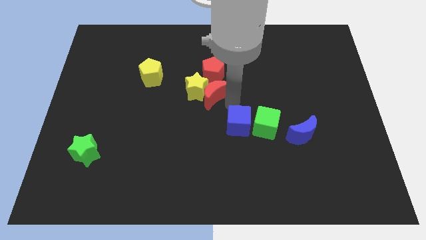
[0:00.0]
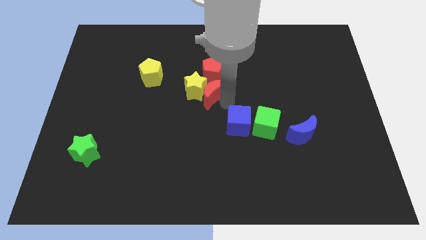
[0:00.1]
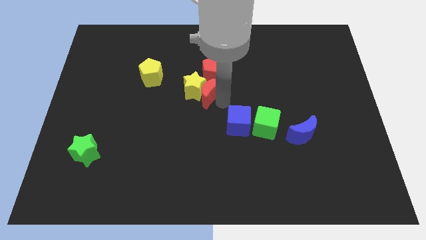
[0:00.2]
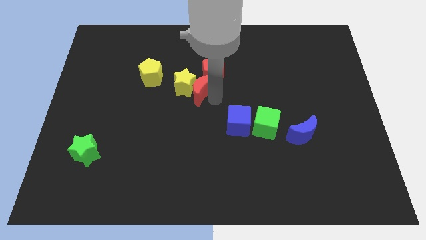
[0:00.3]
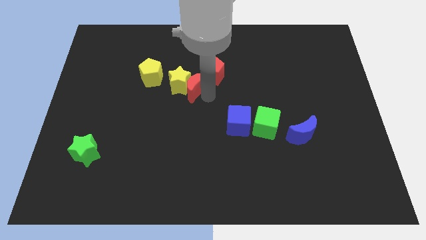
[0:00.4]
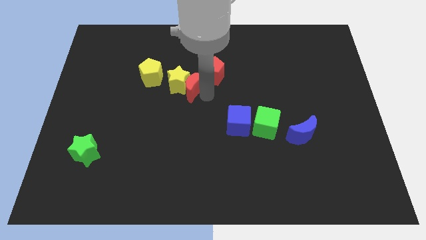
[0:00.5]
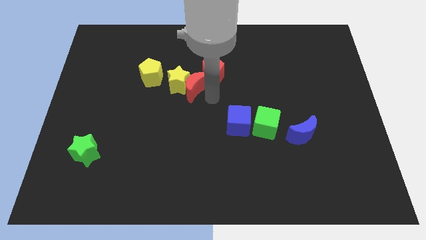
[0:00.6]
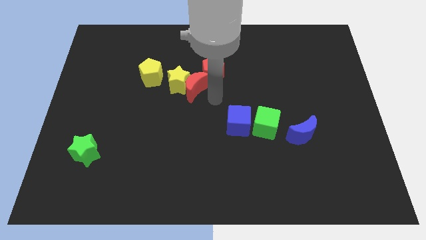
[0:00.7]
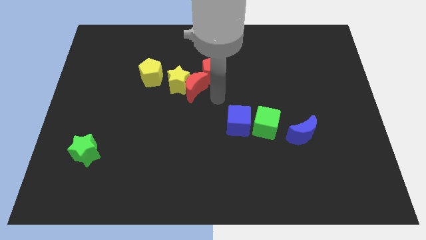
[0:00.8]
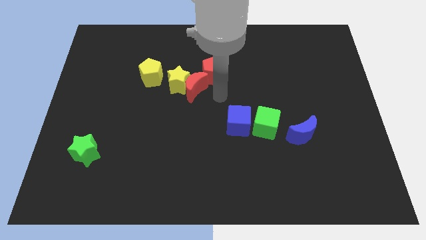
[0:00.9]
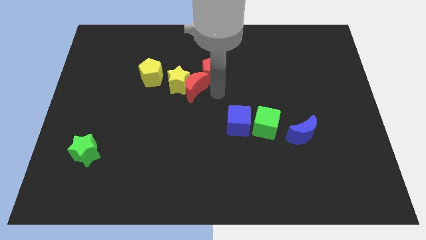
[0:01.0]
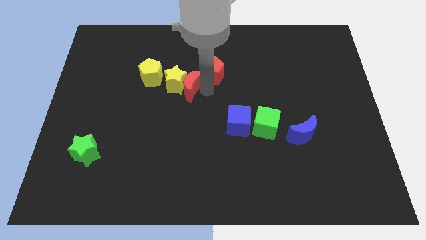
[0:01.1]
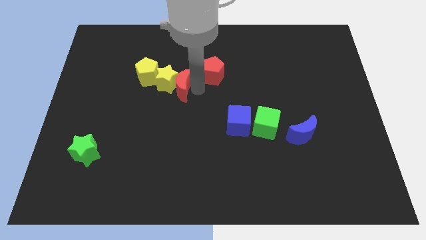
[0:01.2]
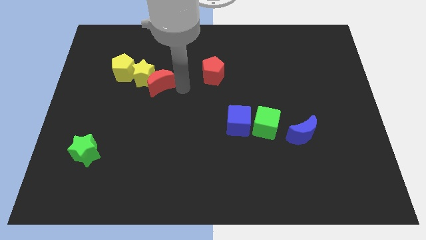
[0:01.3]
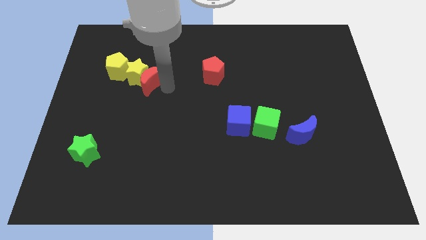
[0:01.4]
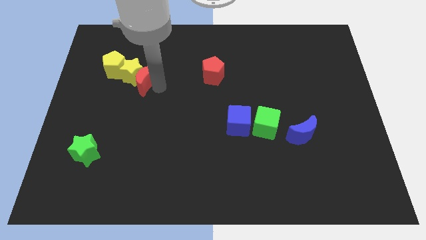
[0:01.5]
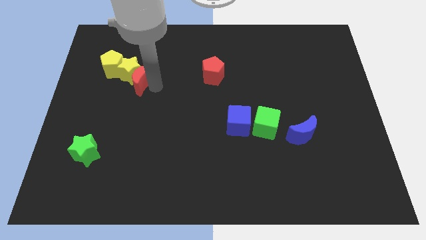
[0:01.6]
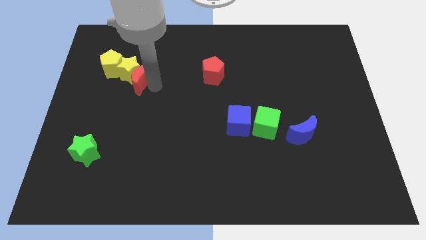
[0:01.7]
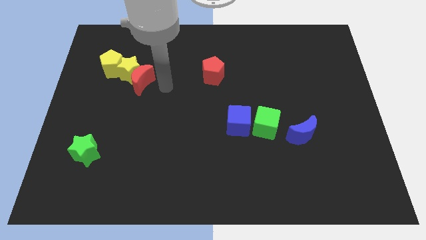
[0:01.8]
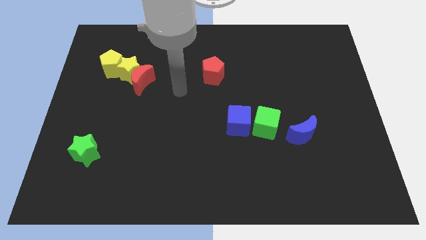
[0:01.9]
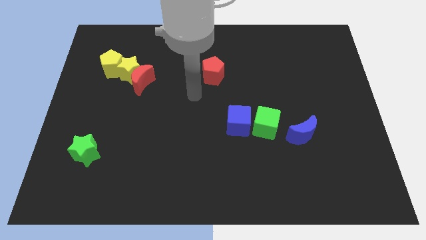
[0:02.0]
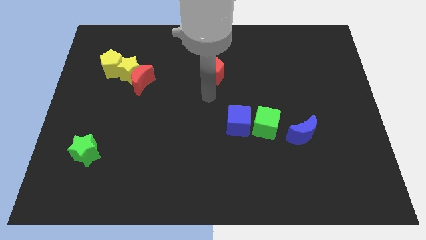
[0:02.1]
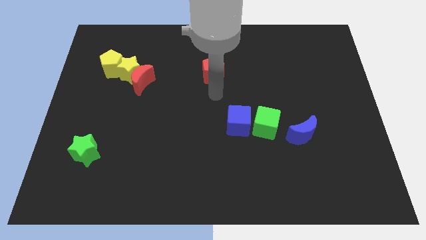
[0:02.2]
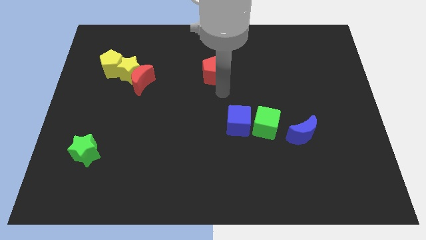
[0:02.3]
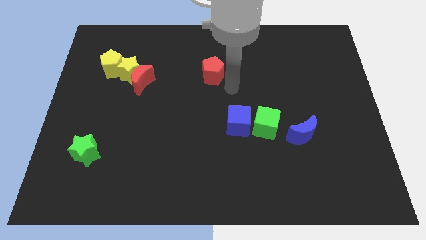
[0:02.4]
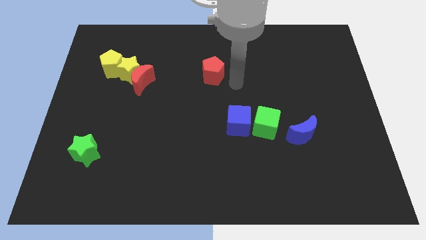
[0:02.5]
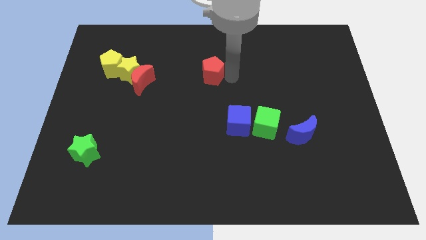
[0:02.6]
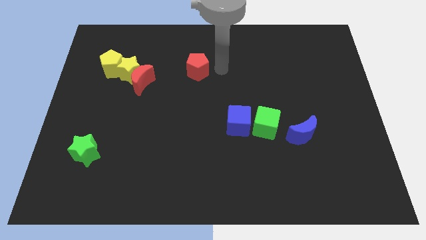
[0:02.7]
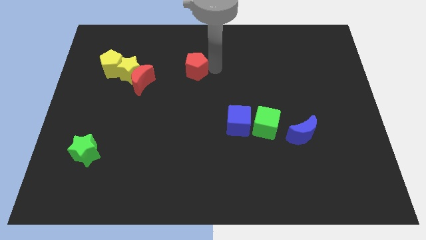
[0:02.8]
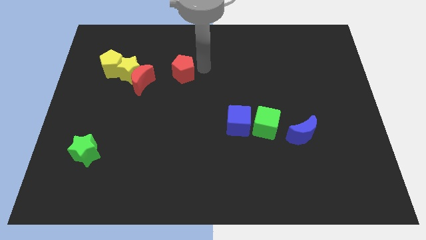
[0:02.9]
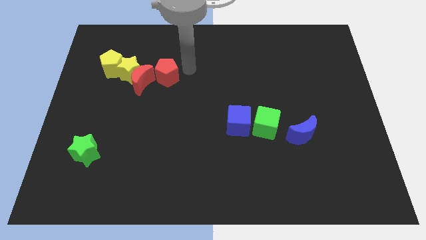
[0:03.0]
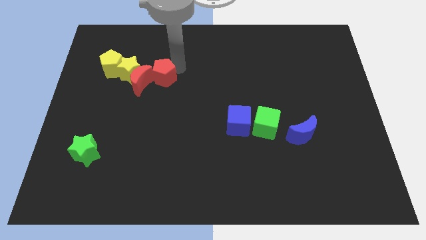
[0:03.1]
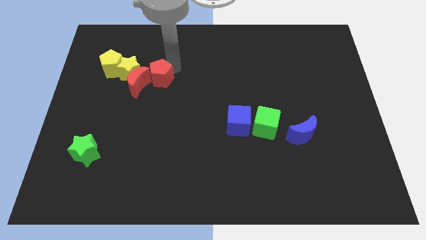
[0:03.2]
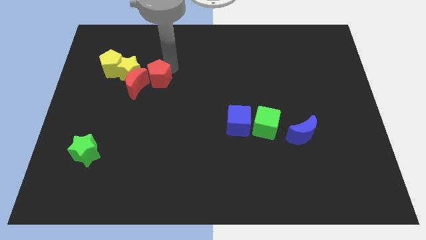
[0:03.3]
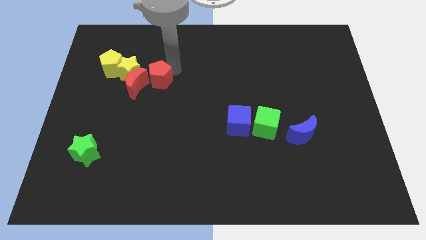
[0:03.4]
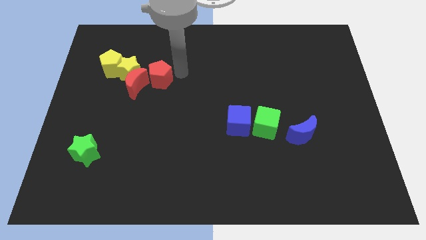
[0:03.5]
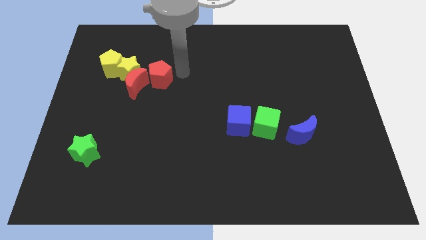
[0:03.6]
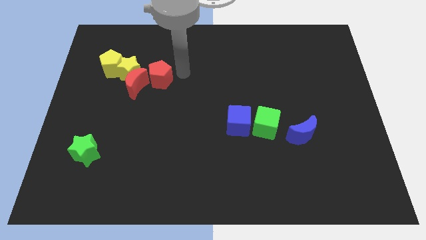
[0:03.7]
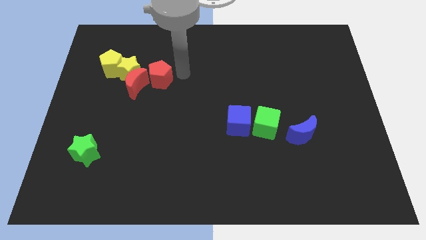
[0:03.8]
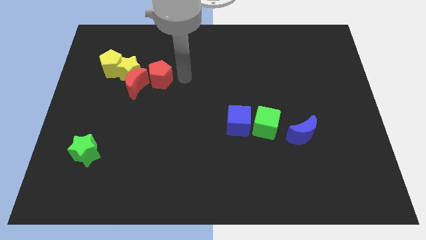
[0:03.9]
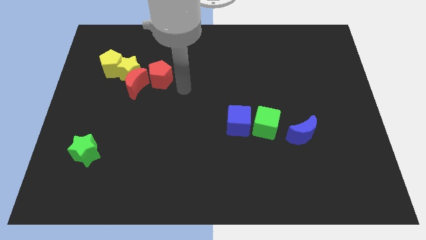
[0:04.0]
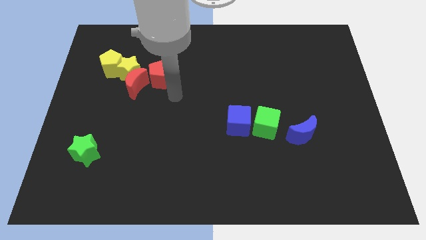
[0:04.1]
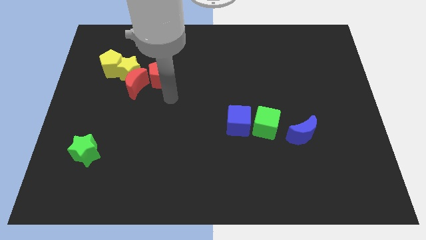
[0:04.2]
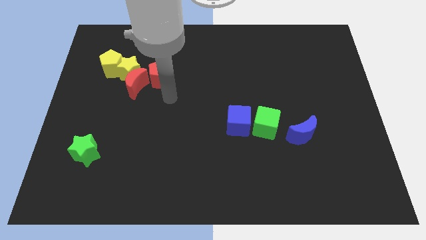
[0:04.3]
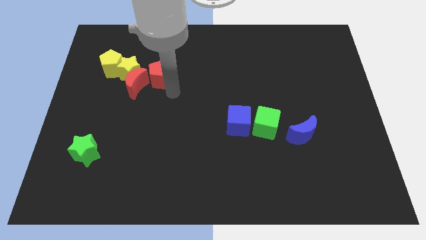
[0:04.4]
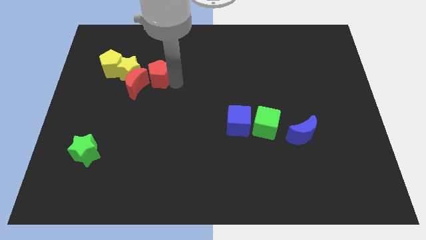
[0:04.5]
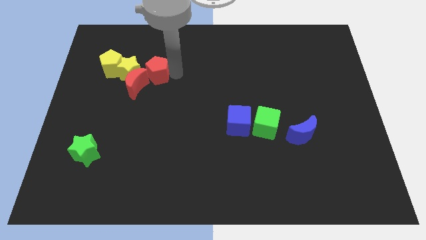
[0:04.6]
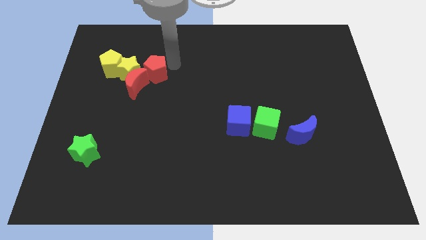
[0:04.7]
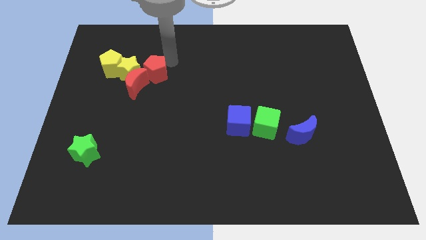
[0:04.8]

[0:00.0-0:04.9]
slide all the yellow and red blocks towards the left side of the board

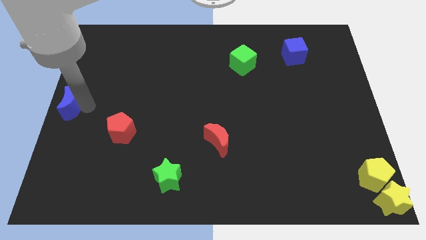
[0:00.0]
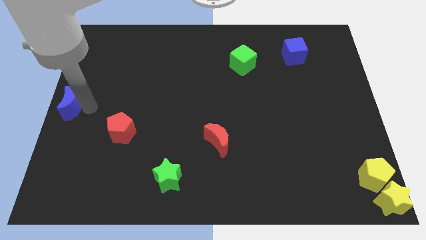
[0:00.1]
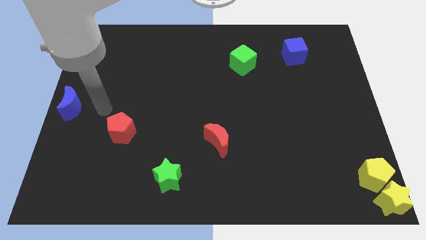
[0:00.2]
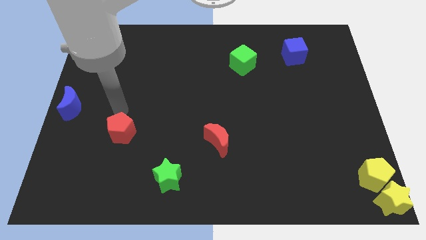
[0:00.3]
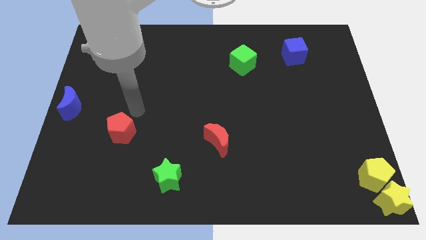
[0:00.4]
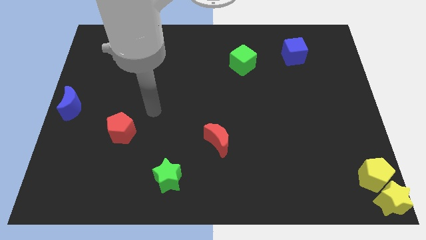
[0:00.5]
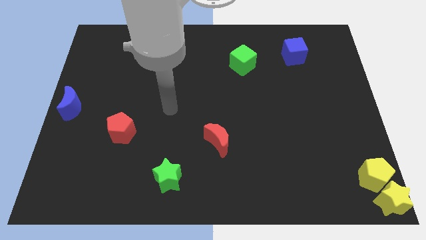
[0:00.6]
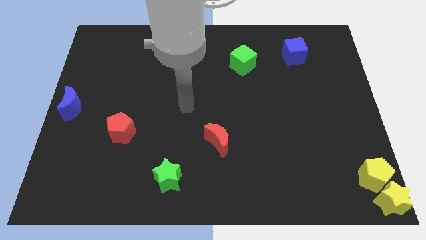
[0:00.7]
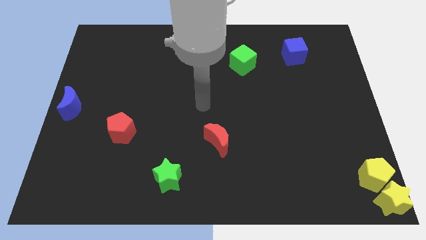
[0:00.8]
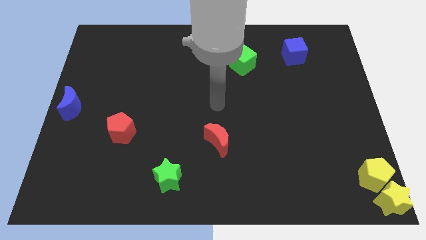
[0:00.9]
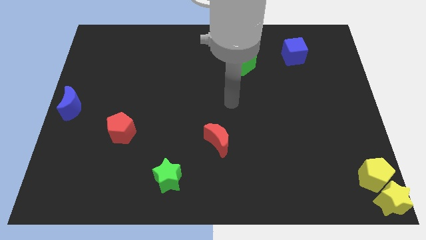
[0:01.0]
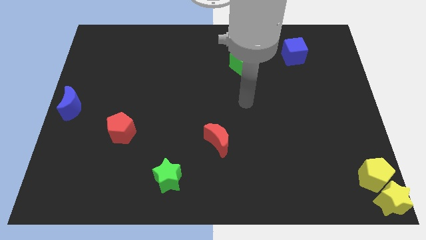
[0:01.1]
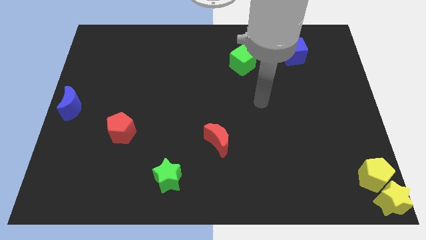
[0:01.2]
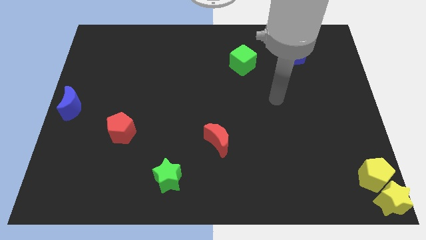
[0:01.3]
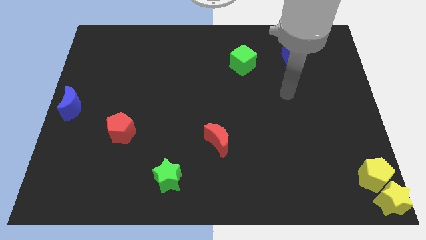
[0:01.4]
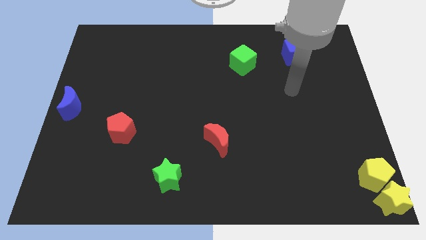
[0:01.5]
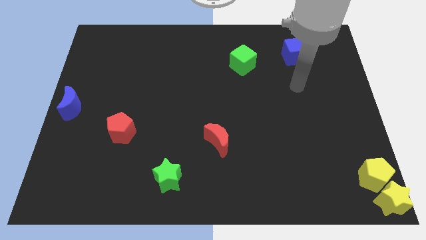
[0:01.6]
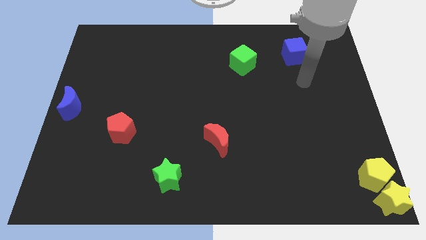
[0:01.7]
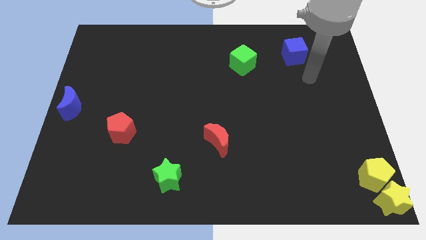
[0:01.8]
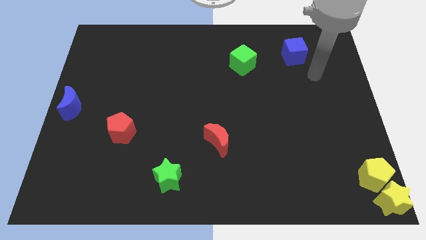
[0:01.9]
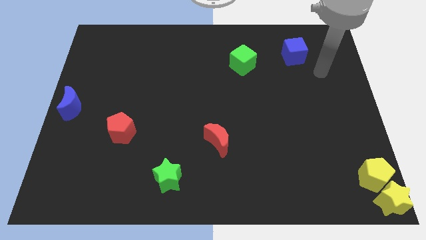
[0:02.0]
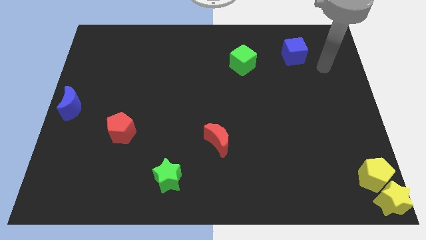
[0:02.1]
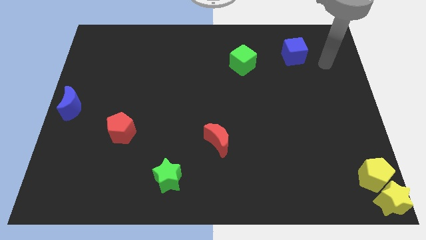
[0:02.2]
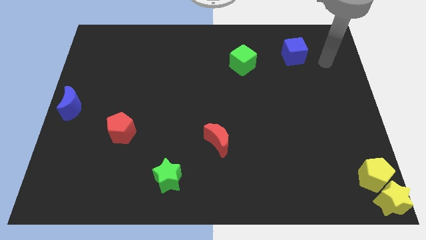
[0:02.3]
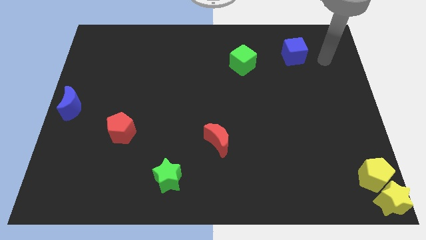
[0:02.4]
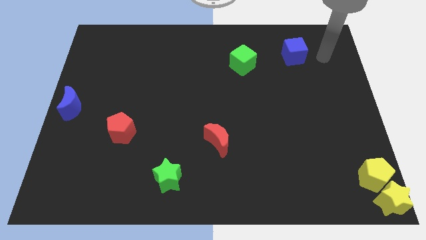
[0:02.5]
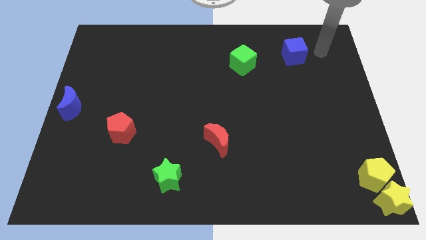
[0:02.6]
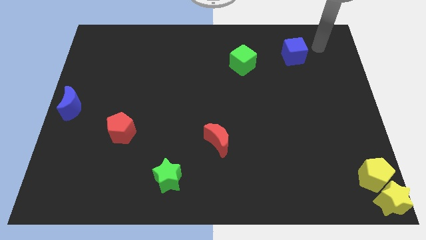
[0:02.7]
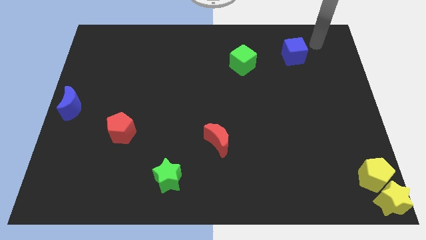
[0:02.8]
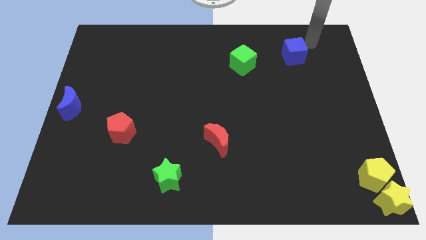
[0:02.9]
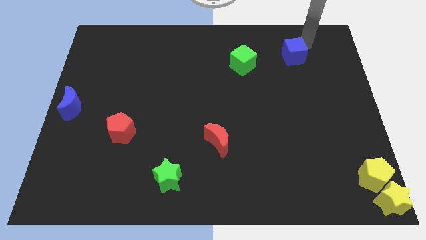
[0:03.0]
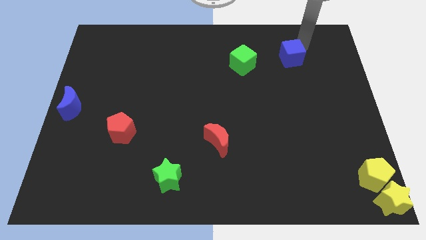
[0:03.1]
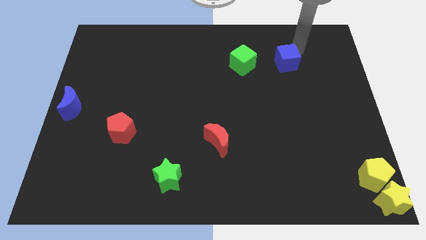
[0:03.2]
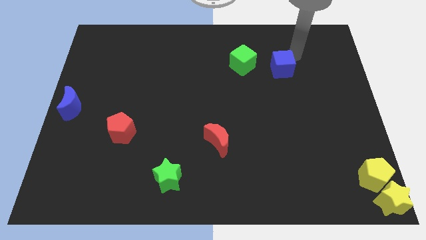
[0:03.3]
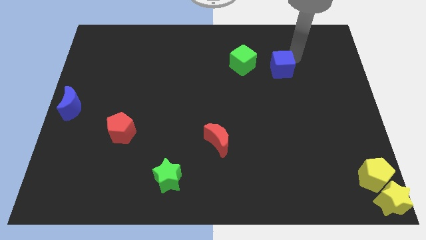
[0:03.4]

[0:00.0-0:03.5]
put the blue cube parallel to green cube

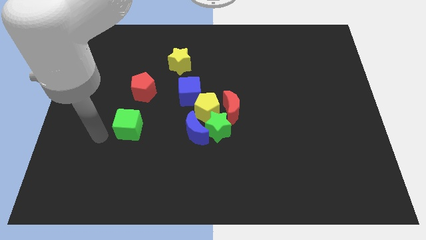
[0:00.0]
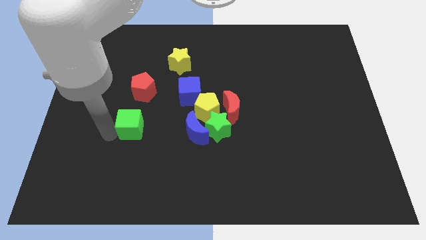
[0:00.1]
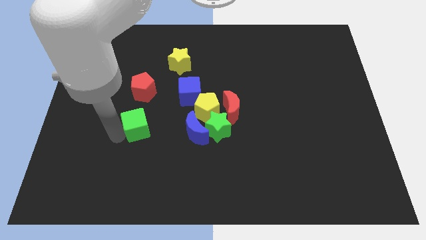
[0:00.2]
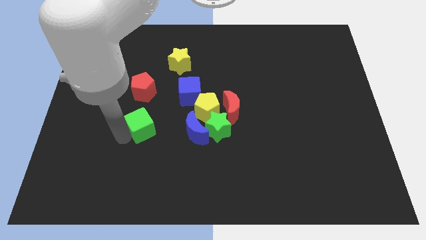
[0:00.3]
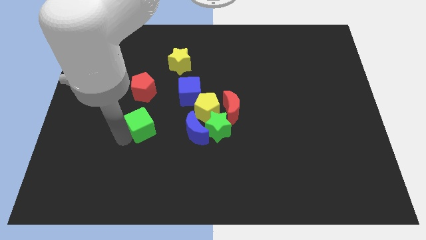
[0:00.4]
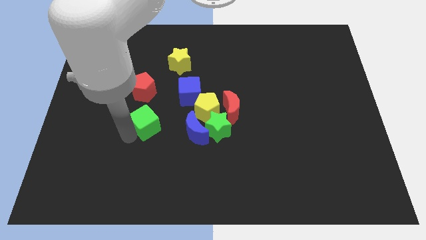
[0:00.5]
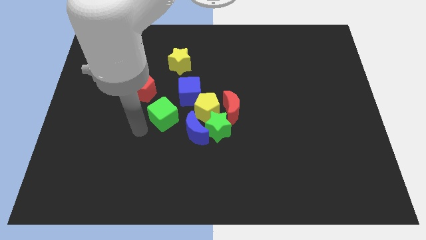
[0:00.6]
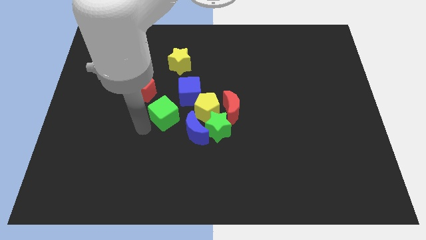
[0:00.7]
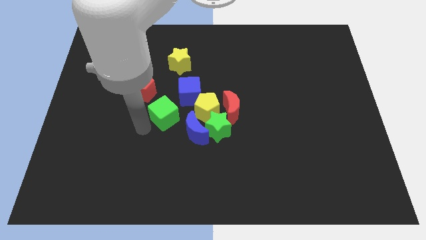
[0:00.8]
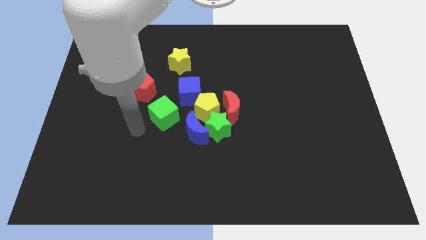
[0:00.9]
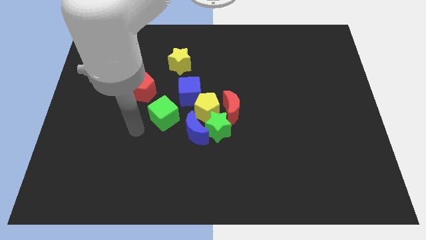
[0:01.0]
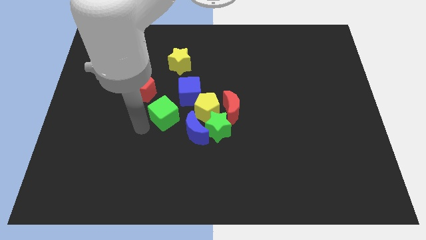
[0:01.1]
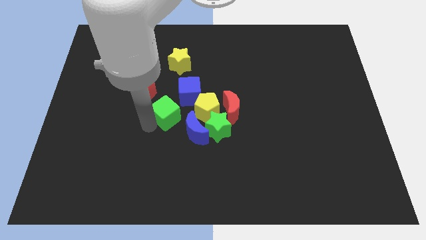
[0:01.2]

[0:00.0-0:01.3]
slide the green cube diagonally bottom right to the red pentagon
